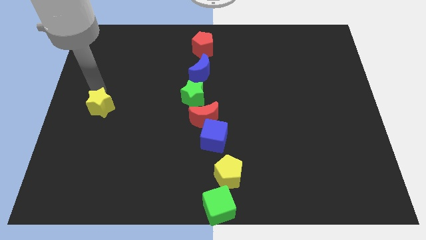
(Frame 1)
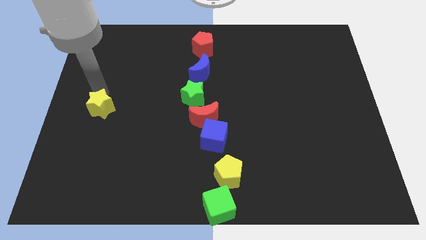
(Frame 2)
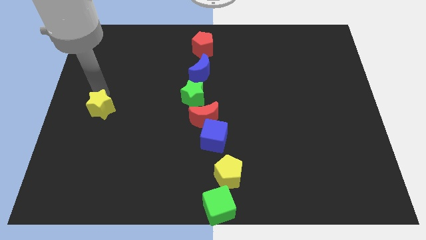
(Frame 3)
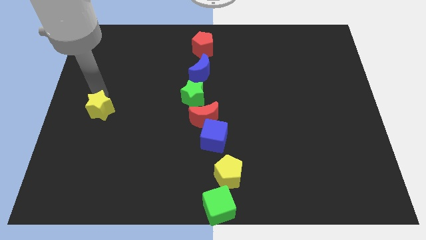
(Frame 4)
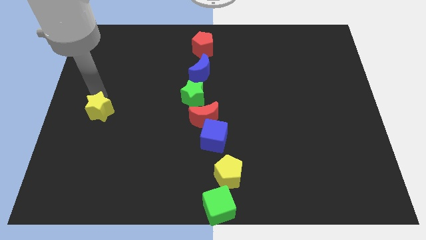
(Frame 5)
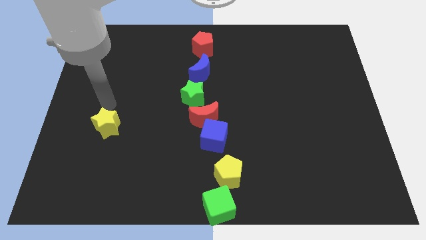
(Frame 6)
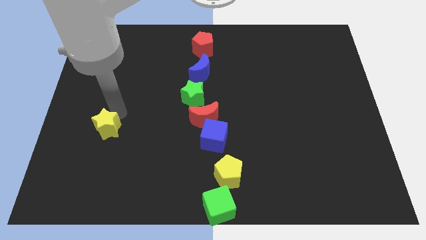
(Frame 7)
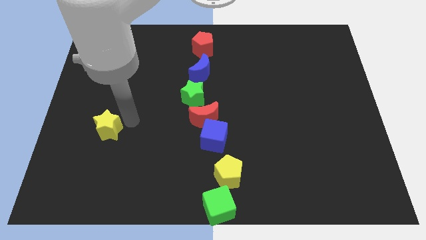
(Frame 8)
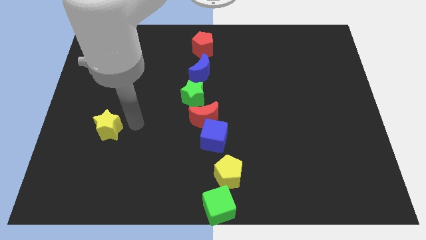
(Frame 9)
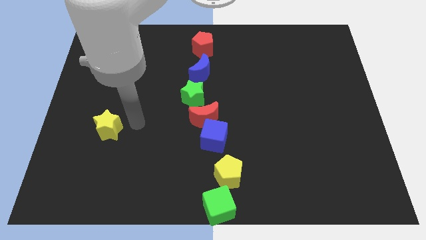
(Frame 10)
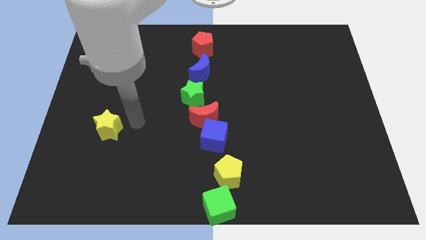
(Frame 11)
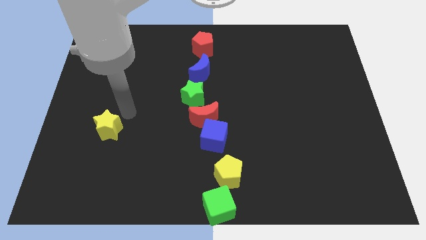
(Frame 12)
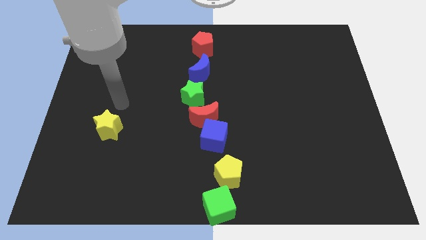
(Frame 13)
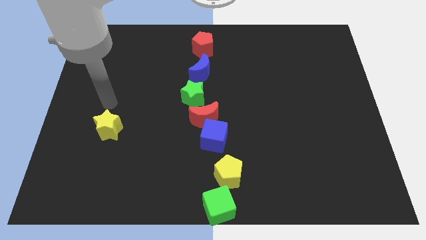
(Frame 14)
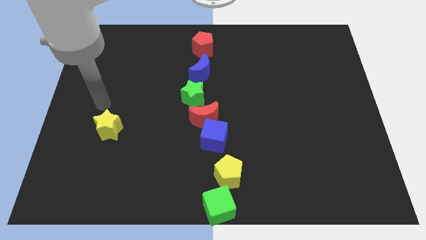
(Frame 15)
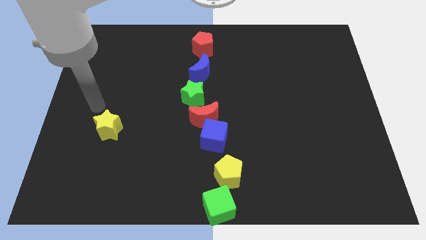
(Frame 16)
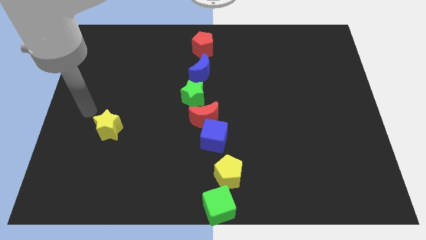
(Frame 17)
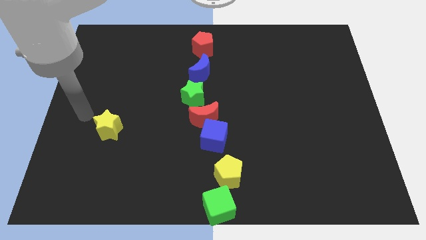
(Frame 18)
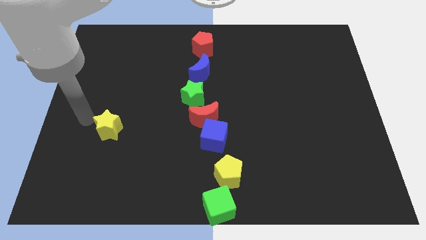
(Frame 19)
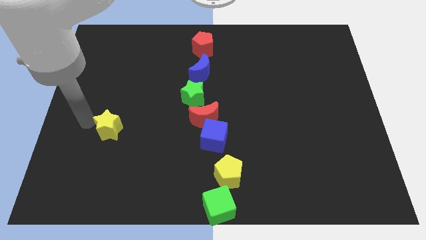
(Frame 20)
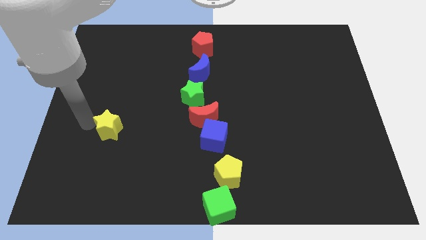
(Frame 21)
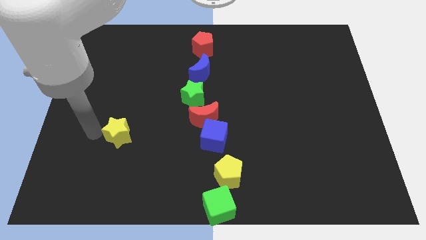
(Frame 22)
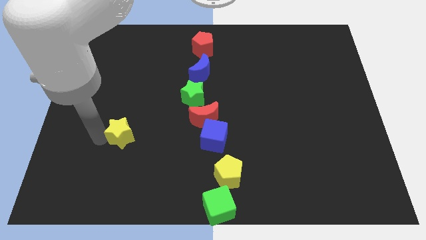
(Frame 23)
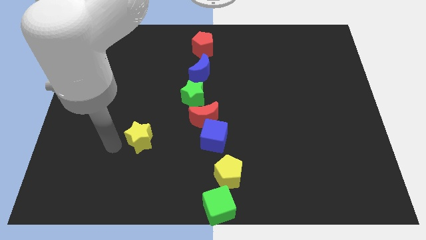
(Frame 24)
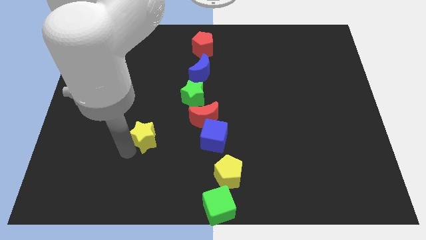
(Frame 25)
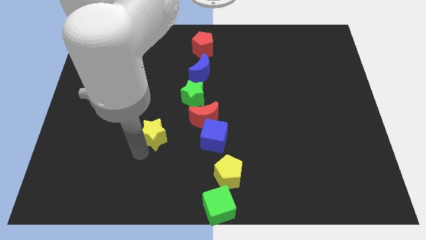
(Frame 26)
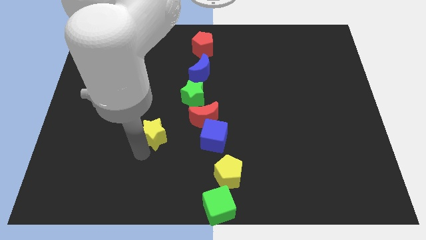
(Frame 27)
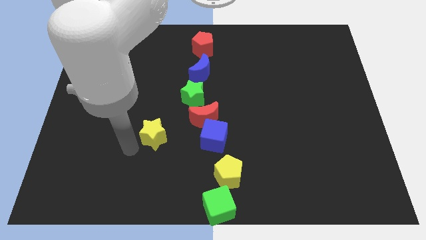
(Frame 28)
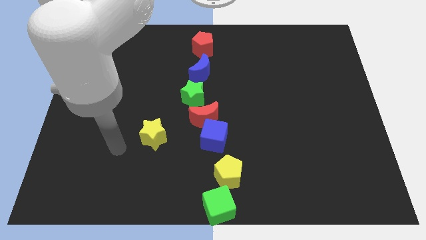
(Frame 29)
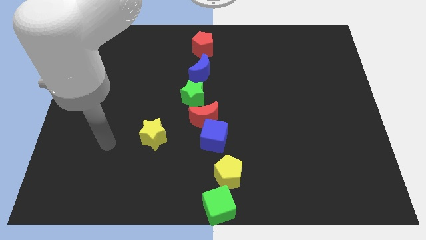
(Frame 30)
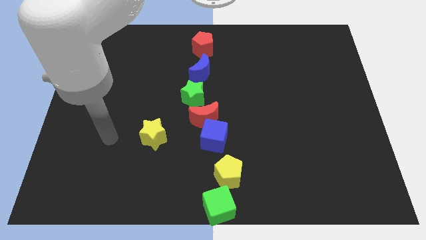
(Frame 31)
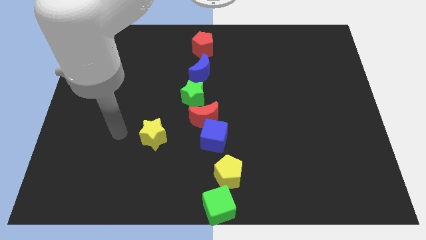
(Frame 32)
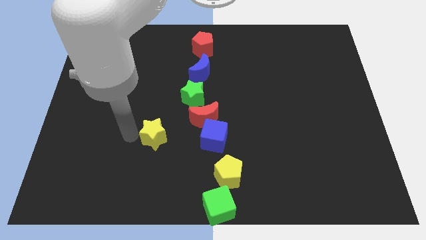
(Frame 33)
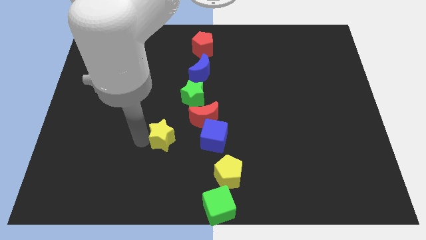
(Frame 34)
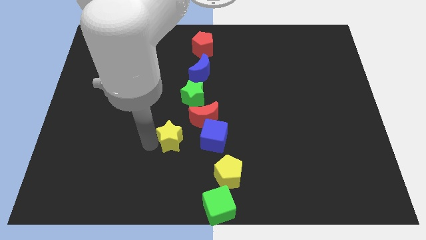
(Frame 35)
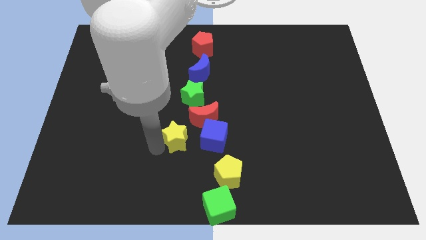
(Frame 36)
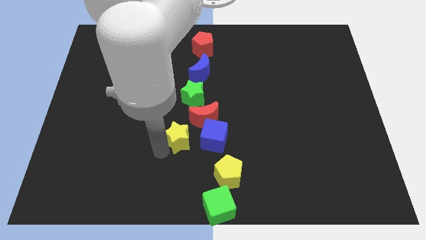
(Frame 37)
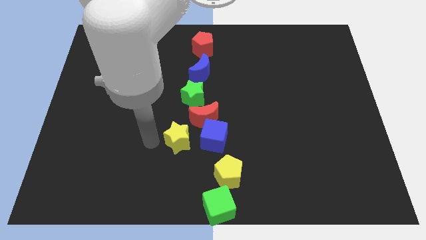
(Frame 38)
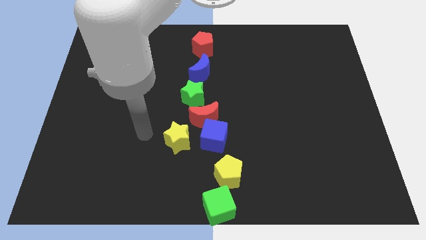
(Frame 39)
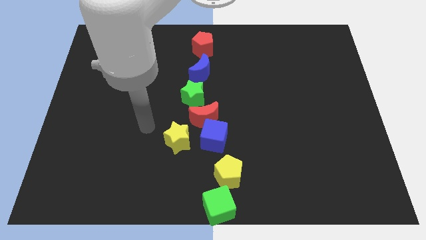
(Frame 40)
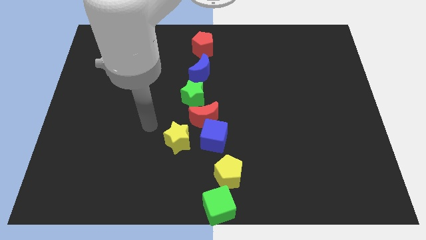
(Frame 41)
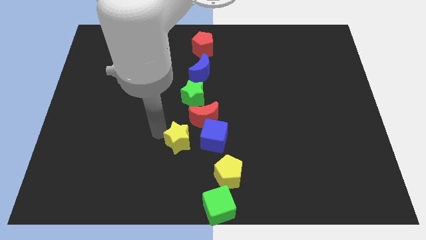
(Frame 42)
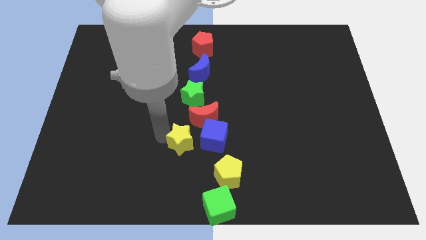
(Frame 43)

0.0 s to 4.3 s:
place yellow star to the left of blue cube

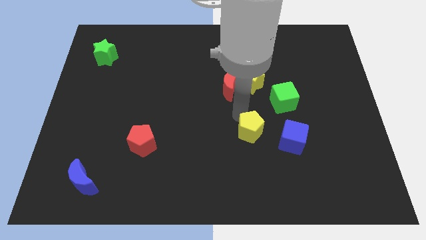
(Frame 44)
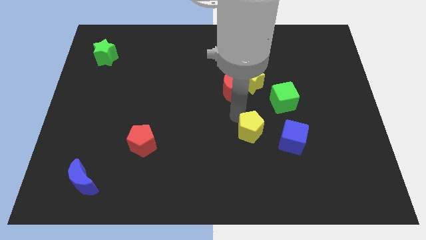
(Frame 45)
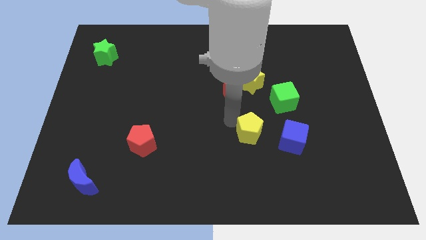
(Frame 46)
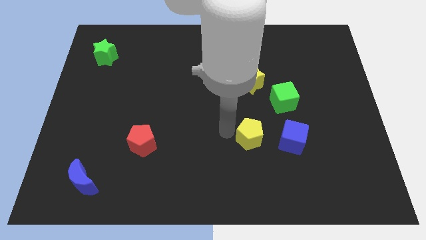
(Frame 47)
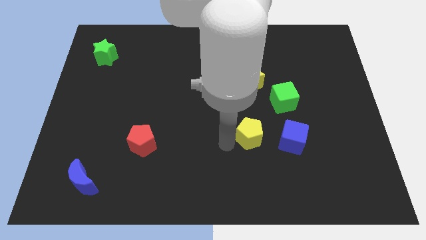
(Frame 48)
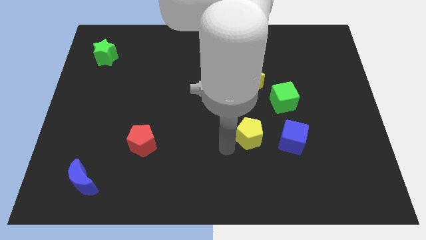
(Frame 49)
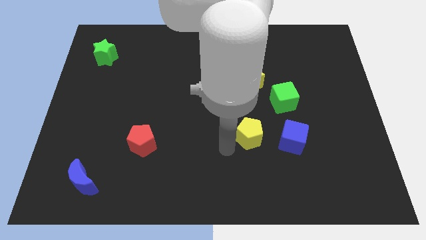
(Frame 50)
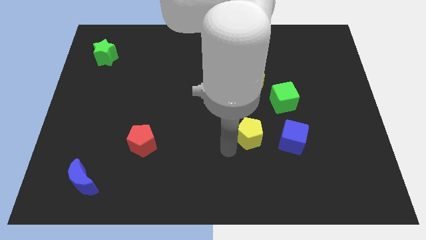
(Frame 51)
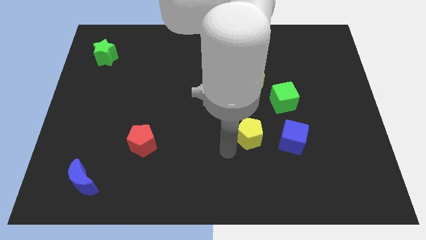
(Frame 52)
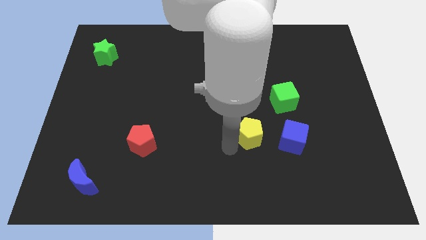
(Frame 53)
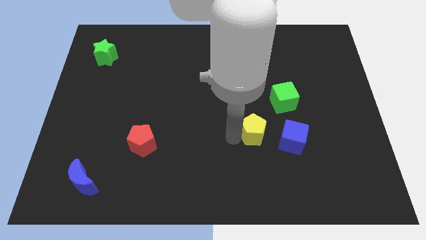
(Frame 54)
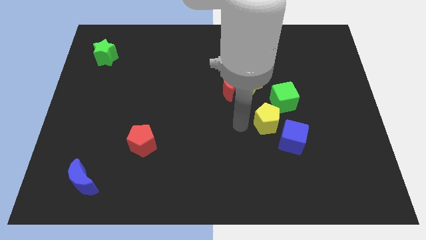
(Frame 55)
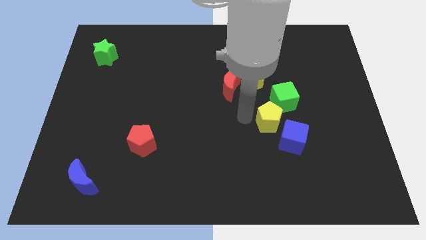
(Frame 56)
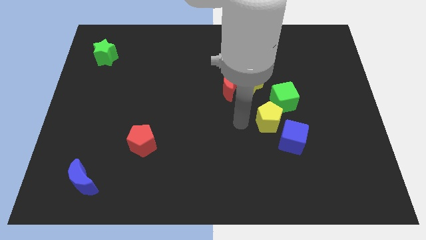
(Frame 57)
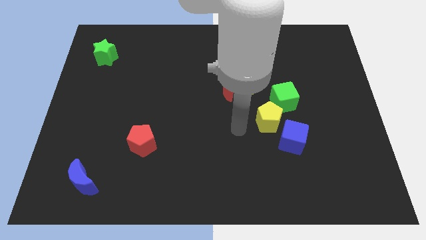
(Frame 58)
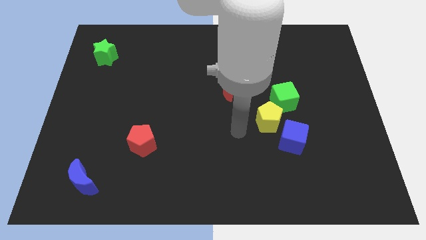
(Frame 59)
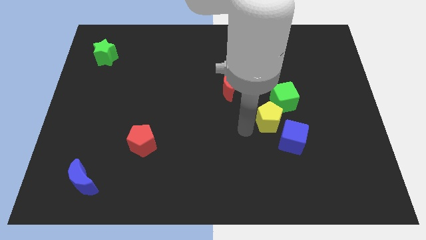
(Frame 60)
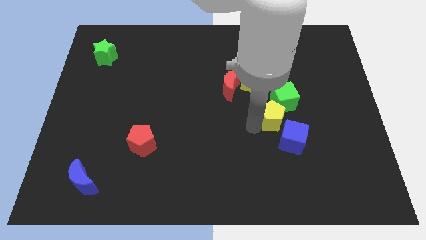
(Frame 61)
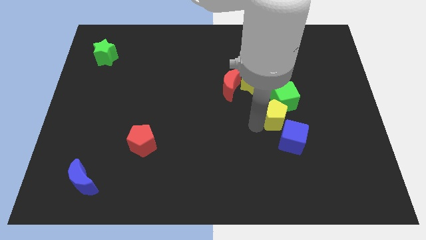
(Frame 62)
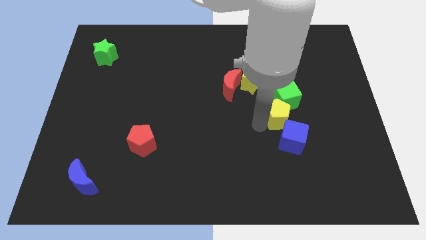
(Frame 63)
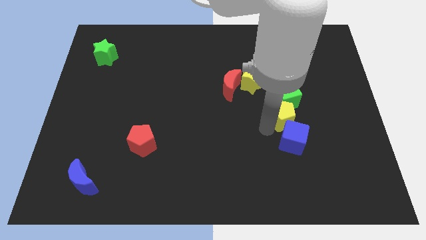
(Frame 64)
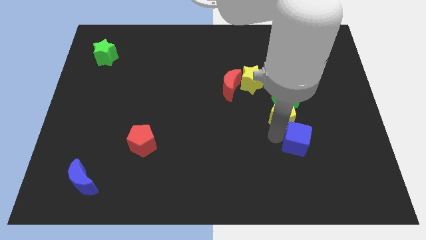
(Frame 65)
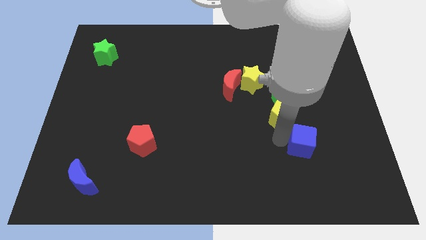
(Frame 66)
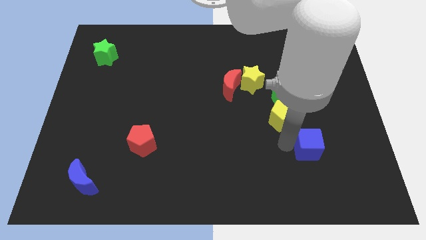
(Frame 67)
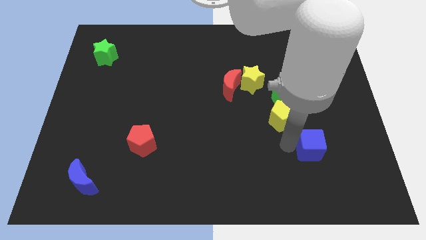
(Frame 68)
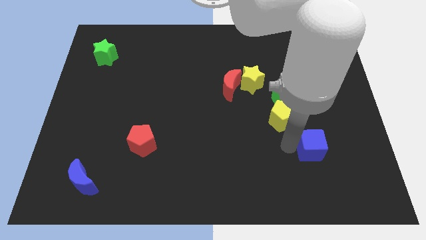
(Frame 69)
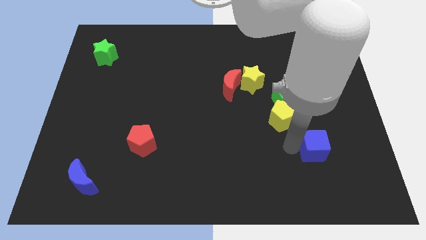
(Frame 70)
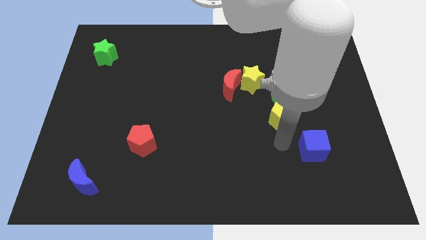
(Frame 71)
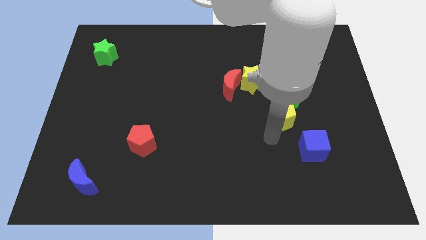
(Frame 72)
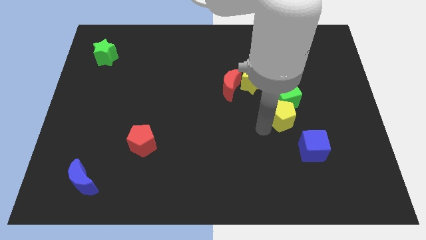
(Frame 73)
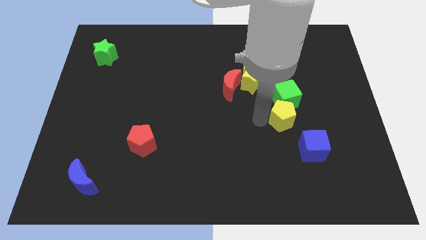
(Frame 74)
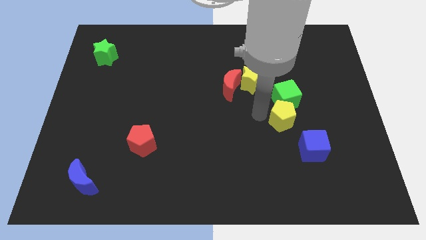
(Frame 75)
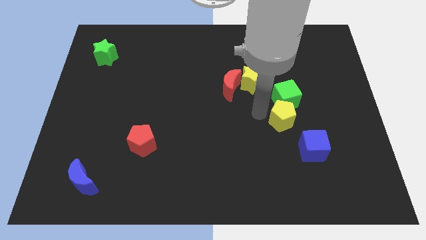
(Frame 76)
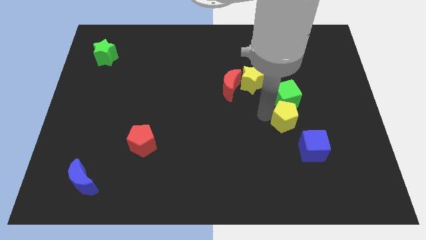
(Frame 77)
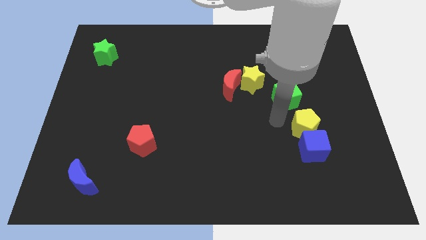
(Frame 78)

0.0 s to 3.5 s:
place the yellow pentagon above the blue cube

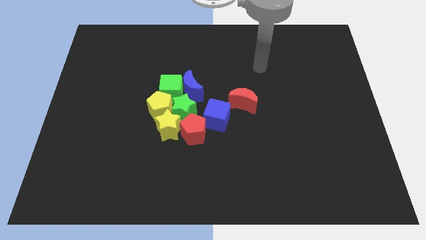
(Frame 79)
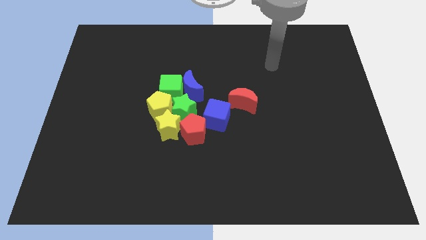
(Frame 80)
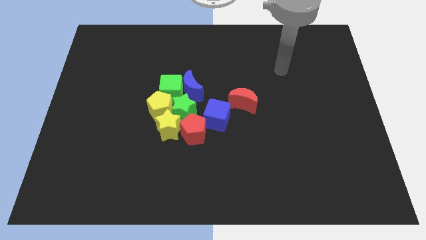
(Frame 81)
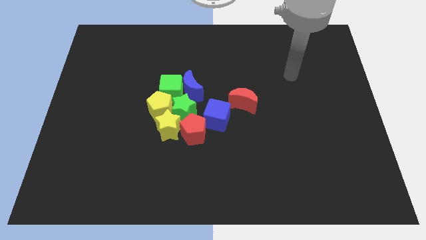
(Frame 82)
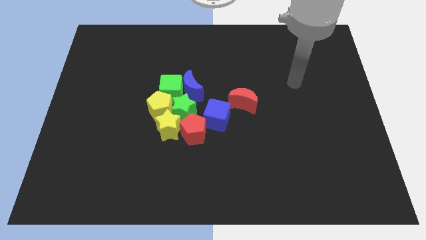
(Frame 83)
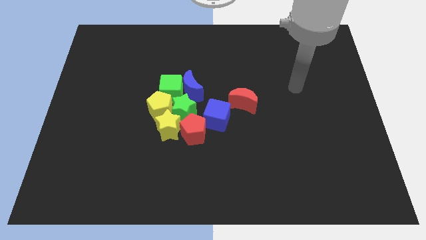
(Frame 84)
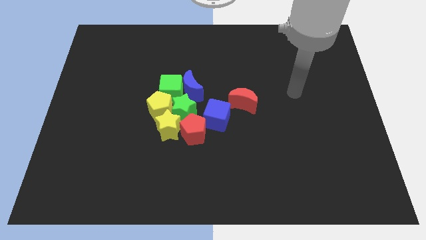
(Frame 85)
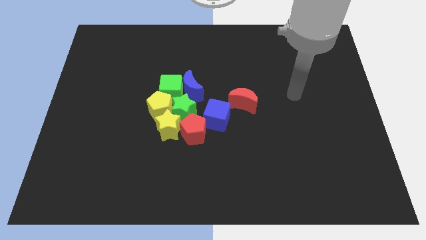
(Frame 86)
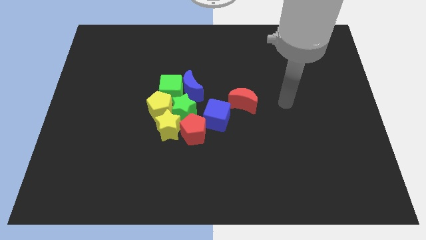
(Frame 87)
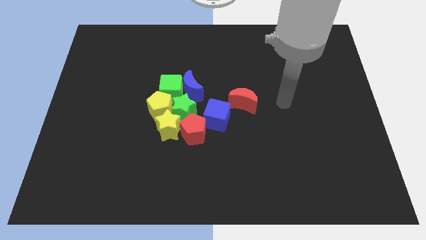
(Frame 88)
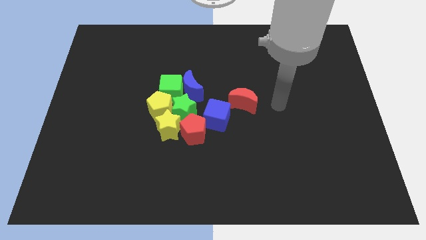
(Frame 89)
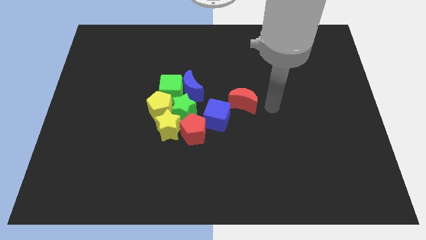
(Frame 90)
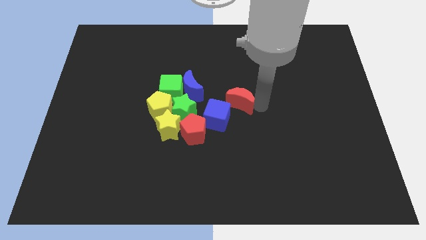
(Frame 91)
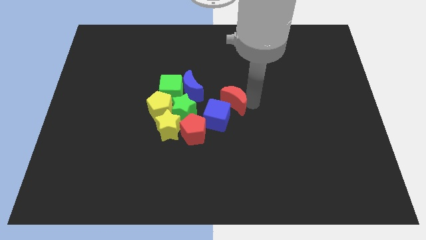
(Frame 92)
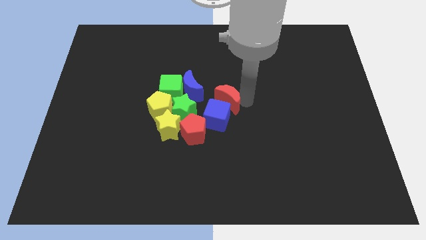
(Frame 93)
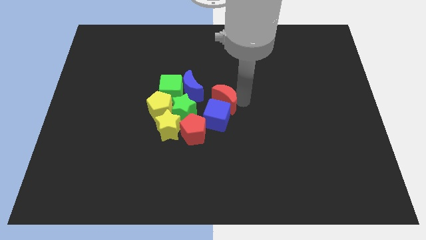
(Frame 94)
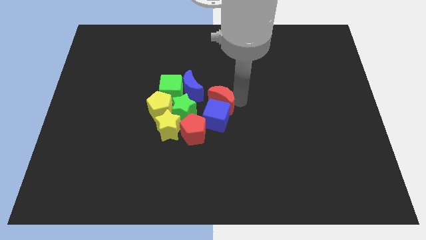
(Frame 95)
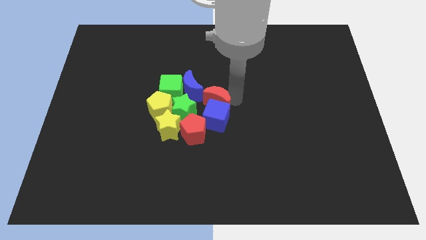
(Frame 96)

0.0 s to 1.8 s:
push the red crescent to the top of the blue cube
